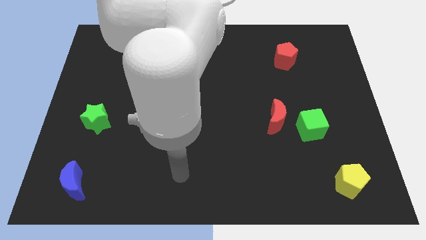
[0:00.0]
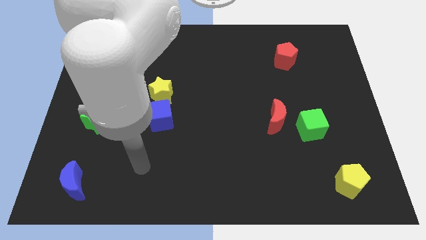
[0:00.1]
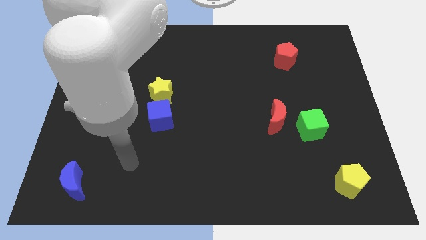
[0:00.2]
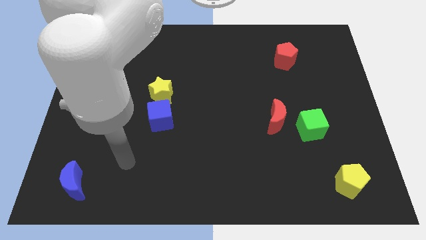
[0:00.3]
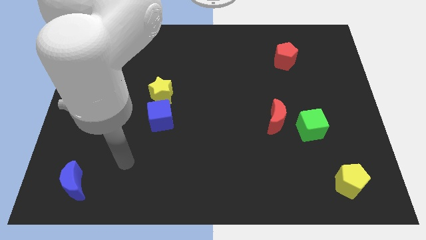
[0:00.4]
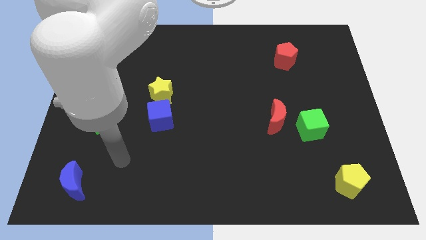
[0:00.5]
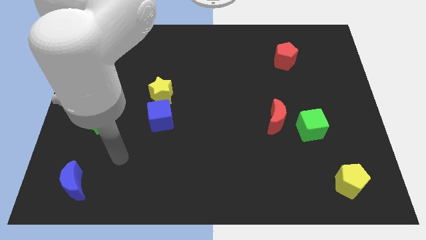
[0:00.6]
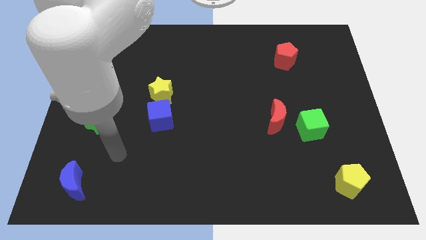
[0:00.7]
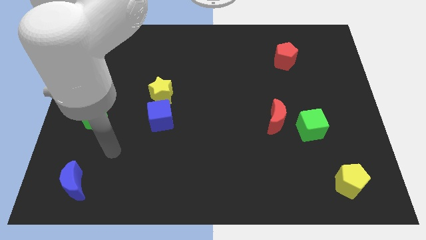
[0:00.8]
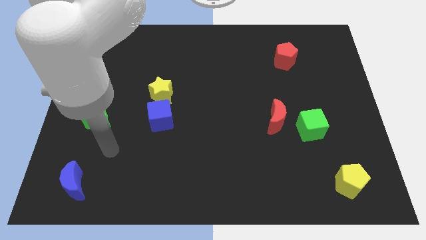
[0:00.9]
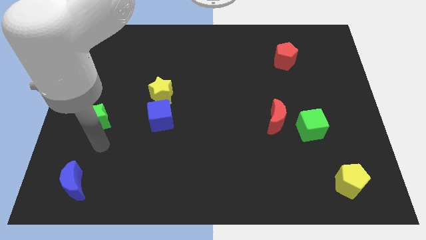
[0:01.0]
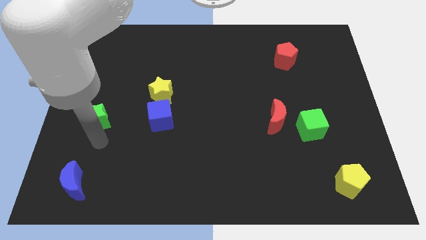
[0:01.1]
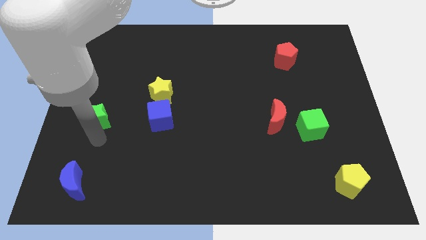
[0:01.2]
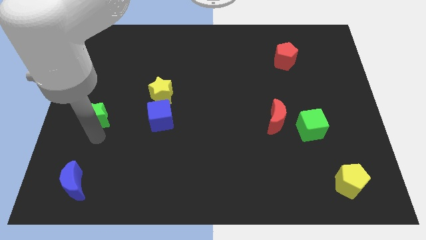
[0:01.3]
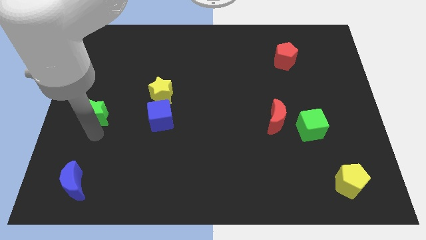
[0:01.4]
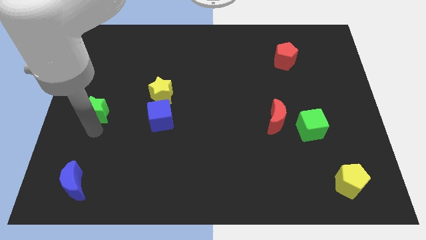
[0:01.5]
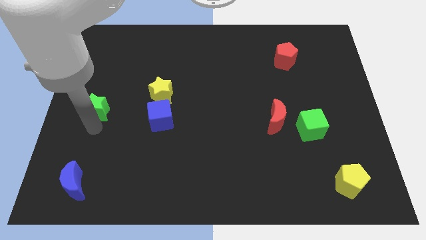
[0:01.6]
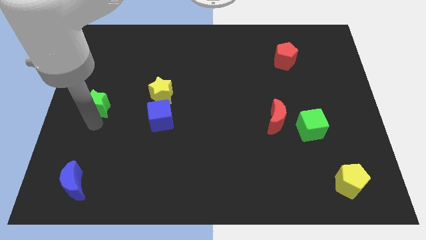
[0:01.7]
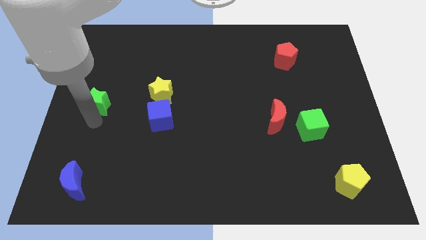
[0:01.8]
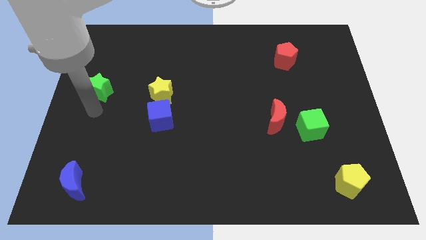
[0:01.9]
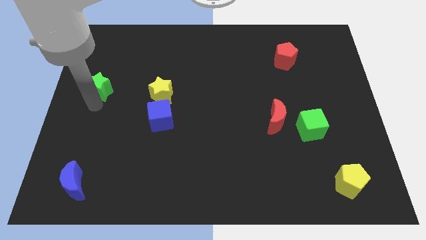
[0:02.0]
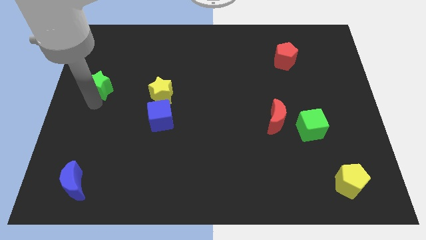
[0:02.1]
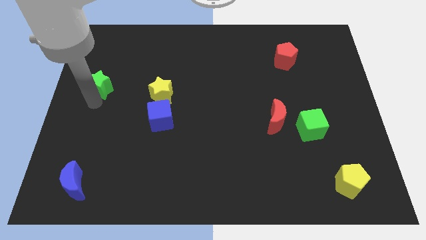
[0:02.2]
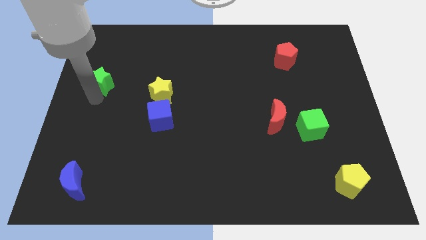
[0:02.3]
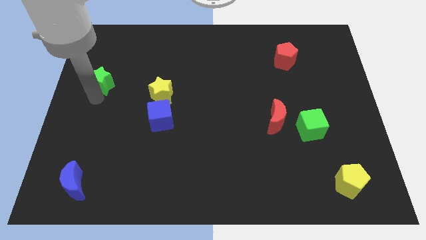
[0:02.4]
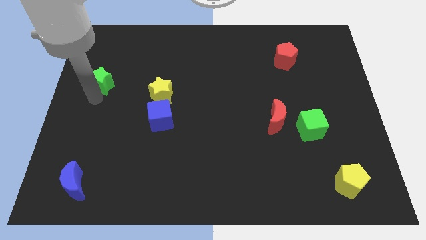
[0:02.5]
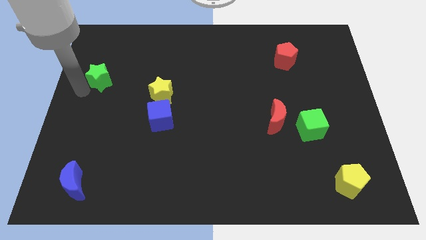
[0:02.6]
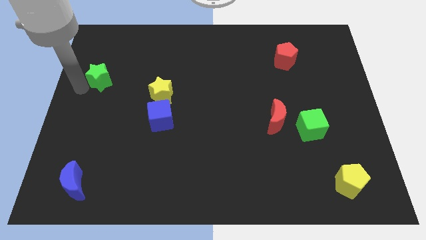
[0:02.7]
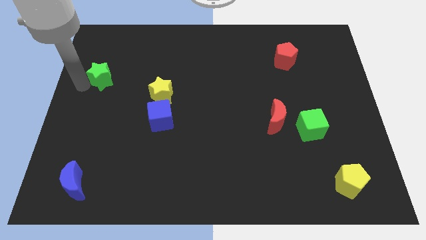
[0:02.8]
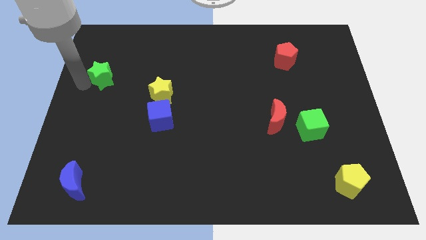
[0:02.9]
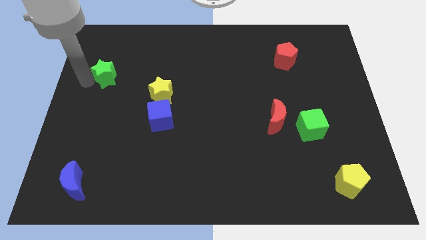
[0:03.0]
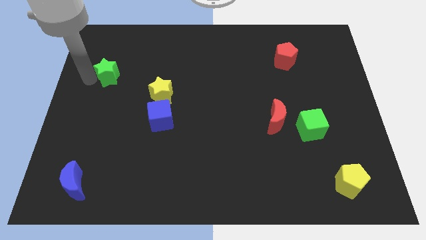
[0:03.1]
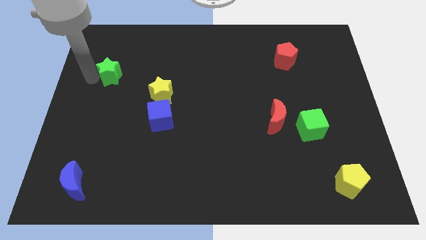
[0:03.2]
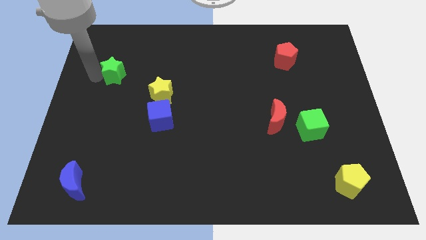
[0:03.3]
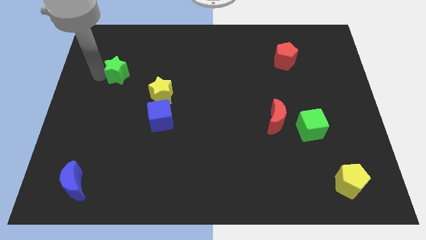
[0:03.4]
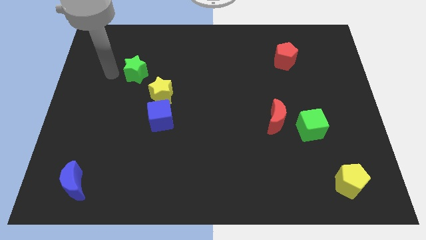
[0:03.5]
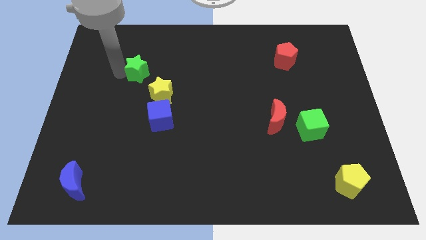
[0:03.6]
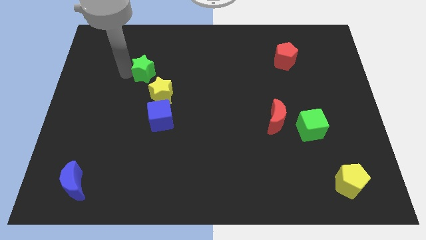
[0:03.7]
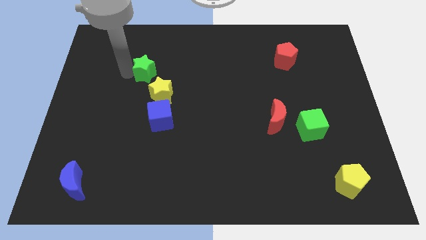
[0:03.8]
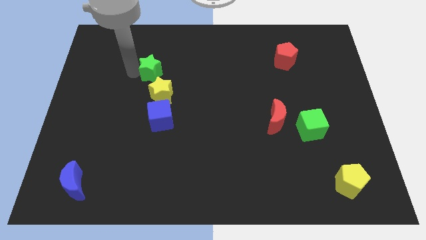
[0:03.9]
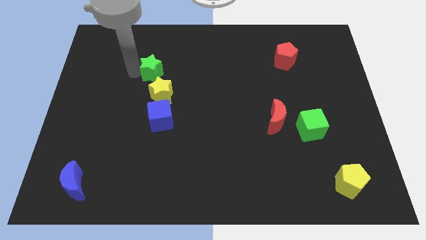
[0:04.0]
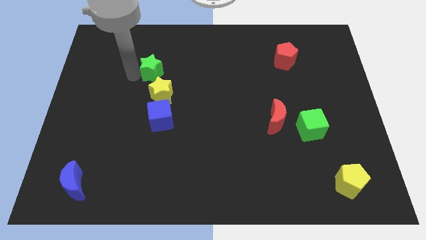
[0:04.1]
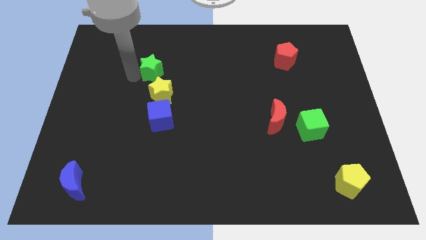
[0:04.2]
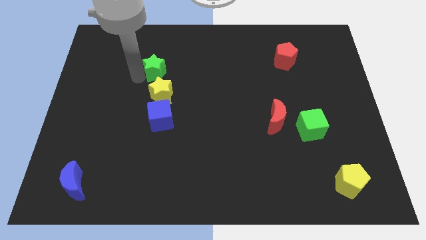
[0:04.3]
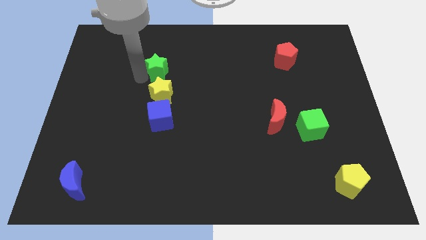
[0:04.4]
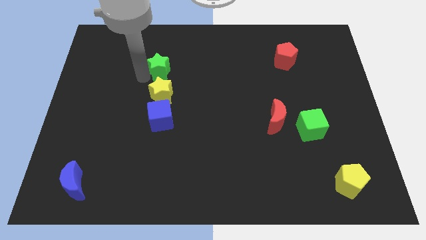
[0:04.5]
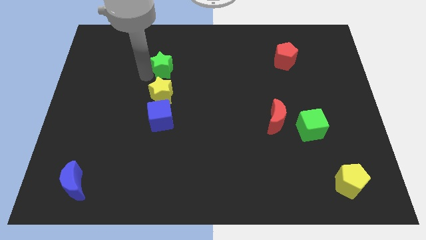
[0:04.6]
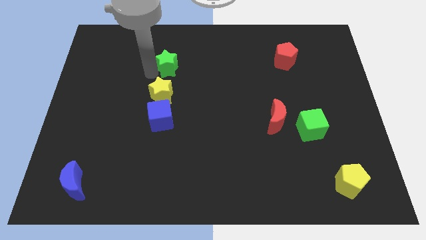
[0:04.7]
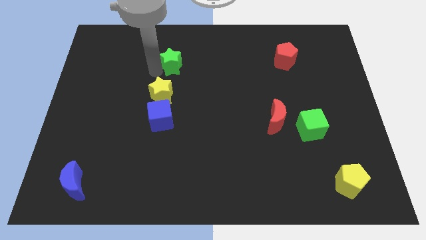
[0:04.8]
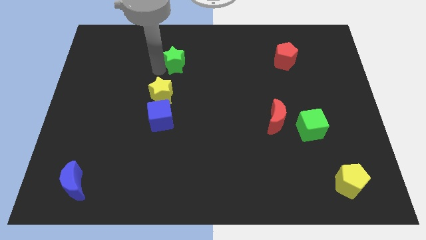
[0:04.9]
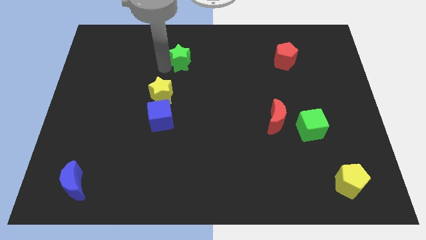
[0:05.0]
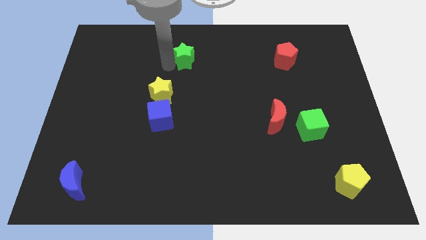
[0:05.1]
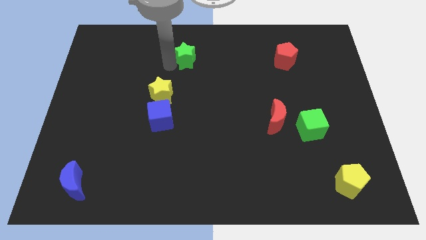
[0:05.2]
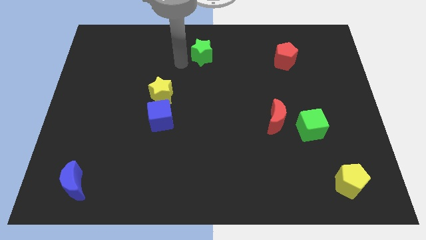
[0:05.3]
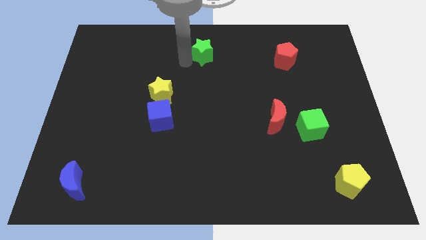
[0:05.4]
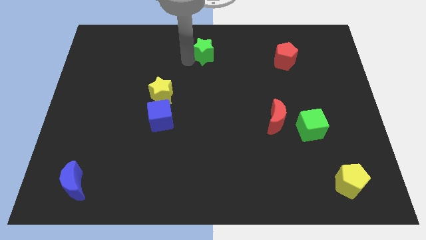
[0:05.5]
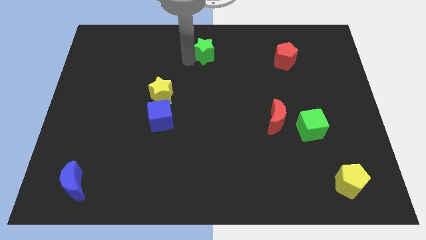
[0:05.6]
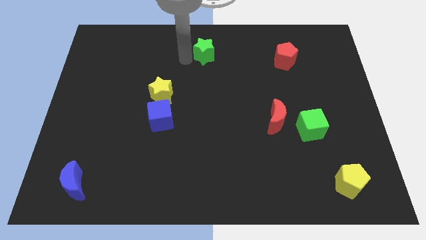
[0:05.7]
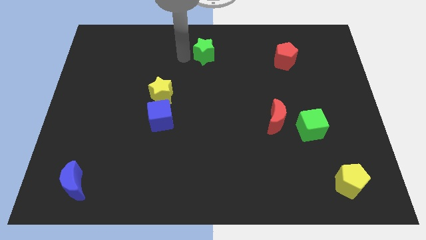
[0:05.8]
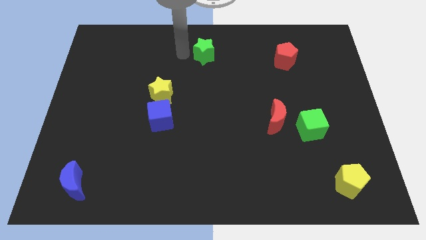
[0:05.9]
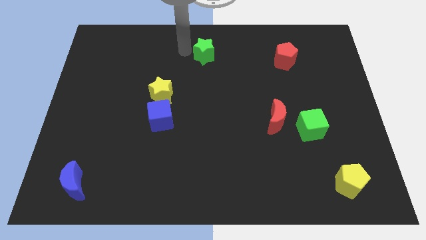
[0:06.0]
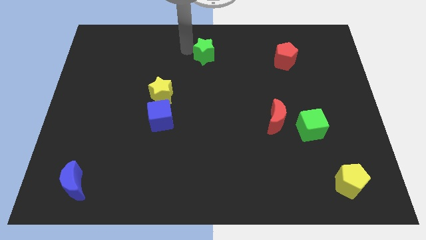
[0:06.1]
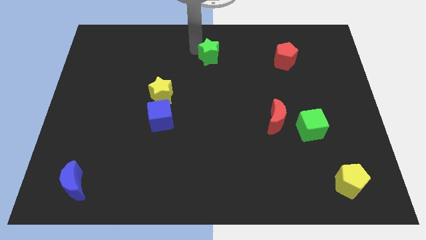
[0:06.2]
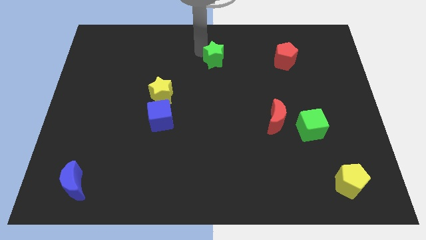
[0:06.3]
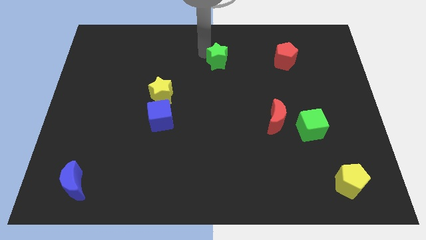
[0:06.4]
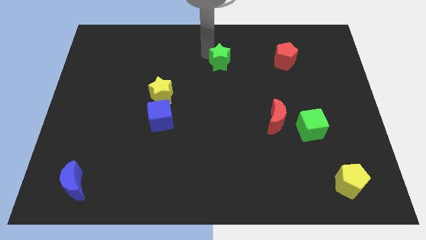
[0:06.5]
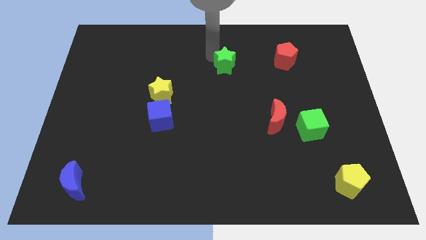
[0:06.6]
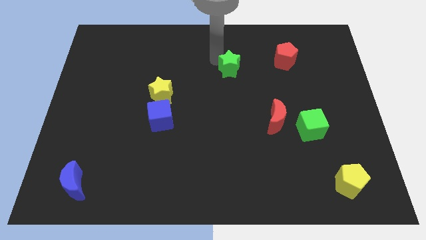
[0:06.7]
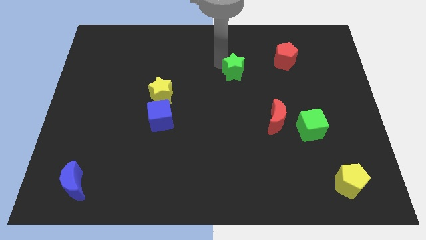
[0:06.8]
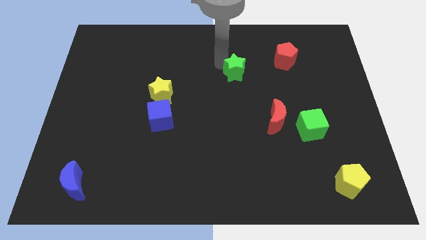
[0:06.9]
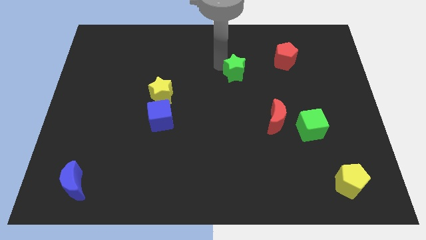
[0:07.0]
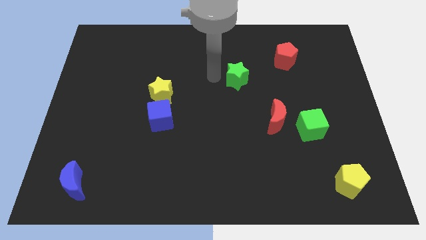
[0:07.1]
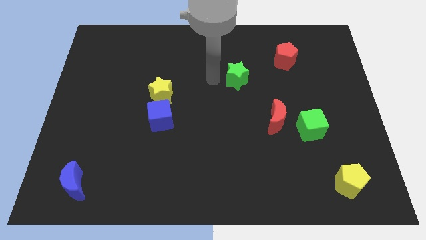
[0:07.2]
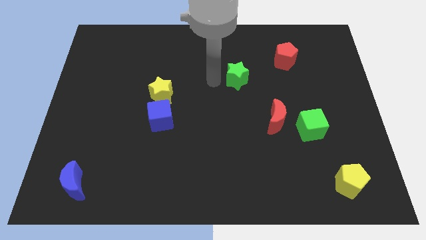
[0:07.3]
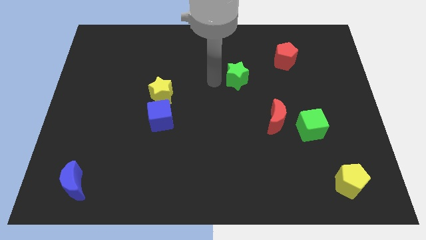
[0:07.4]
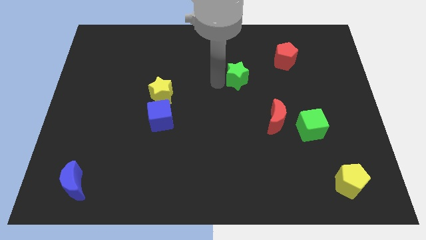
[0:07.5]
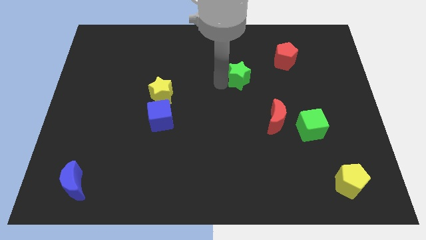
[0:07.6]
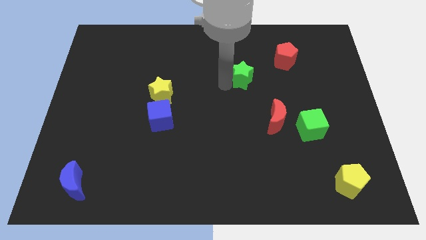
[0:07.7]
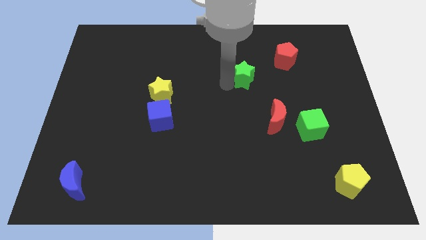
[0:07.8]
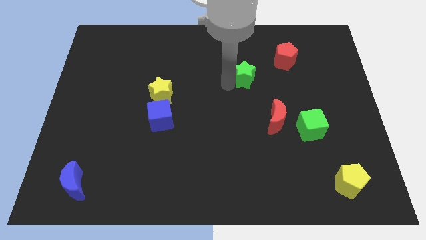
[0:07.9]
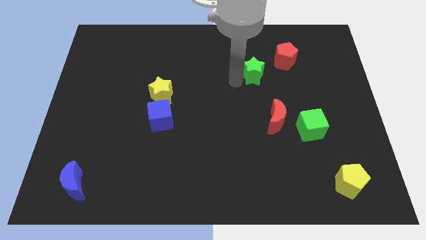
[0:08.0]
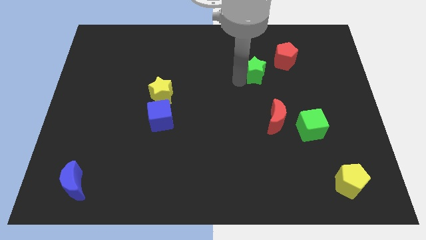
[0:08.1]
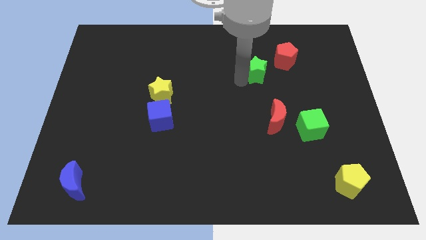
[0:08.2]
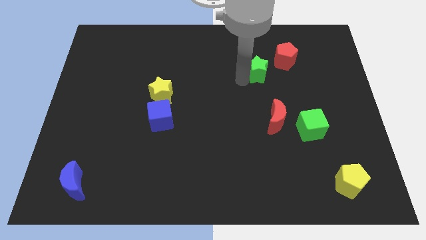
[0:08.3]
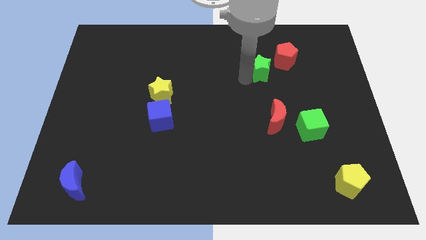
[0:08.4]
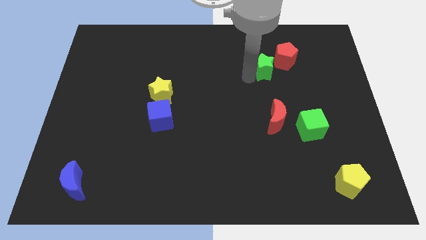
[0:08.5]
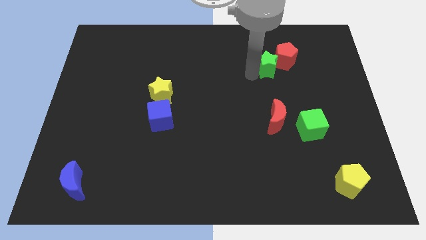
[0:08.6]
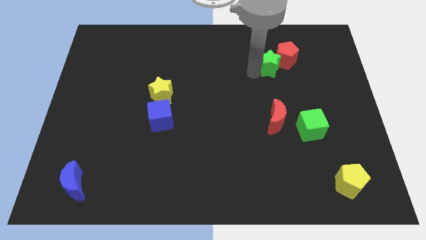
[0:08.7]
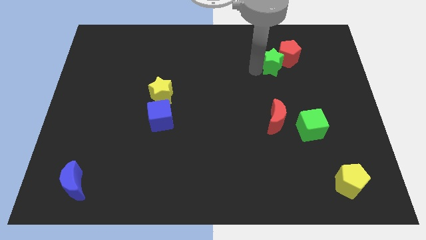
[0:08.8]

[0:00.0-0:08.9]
slide the green star to the red pentagon
